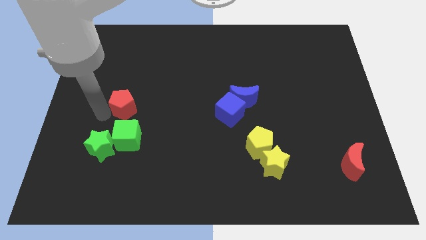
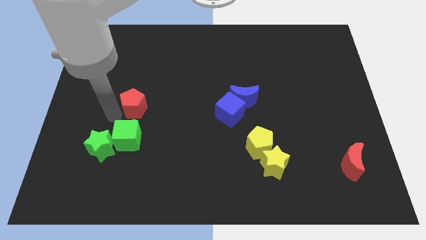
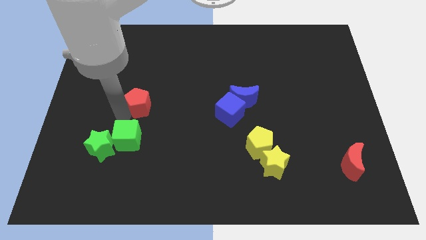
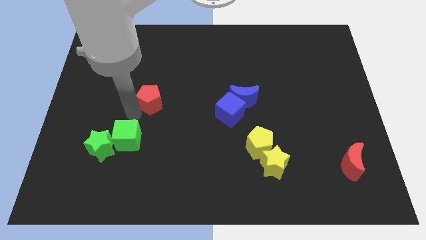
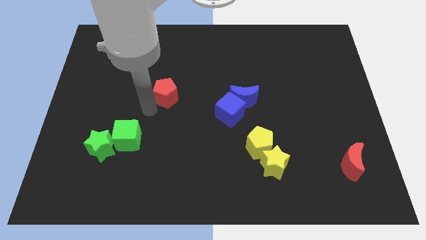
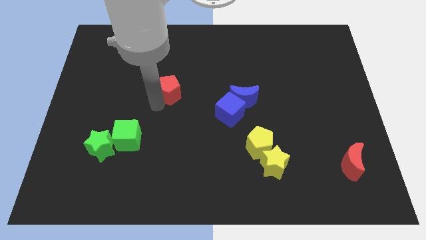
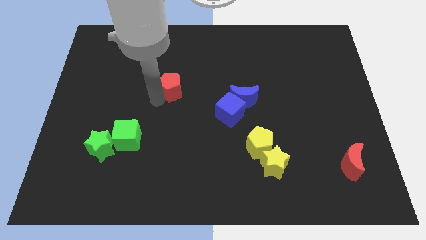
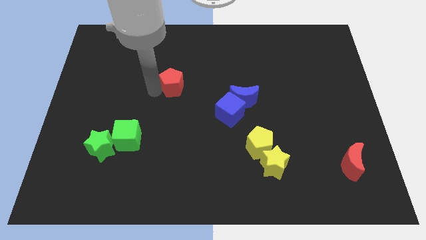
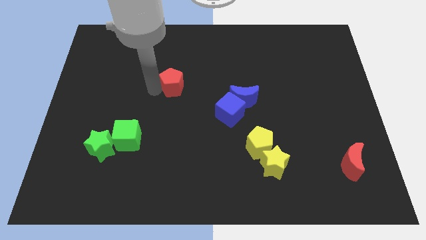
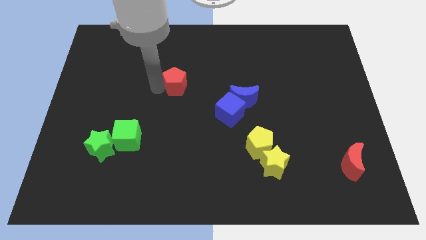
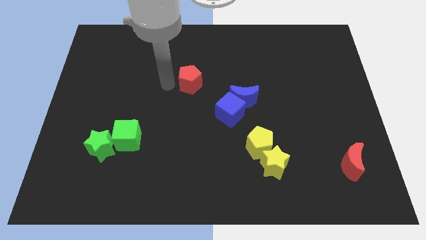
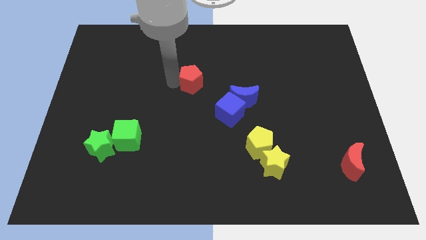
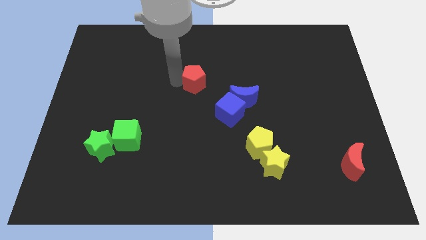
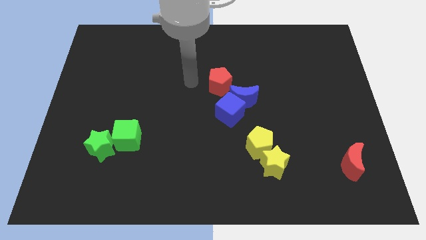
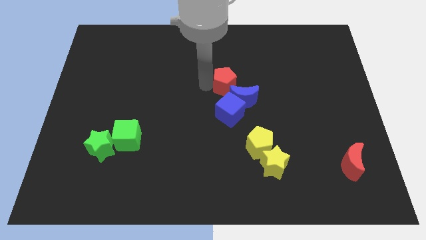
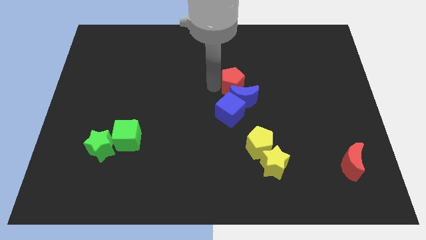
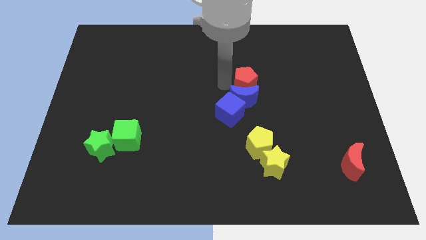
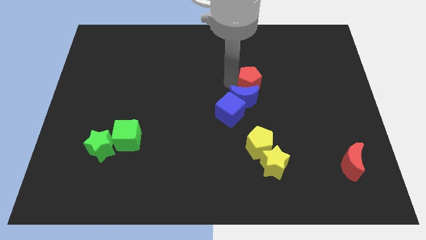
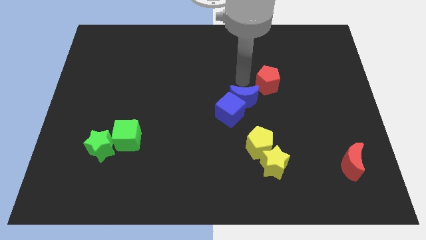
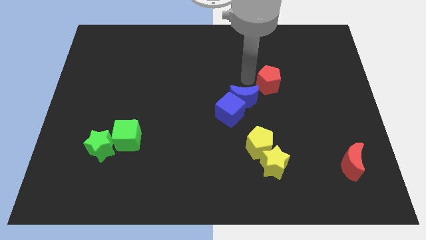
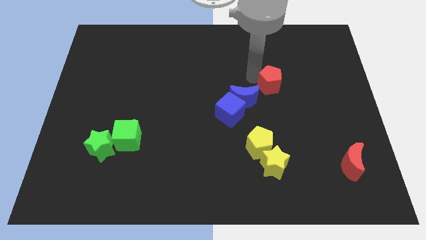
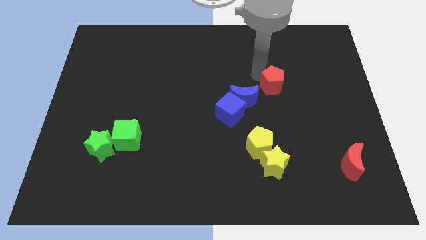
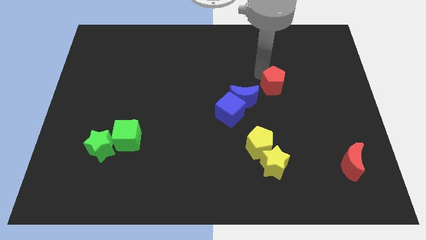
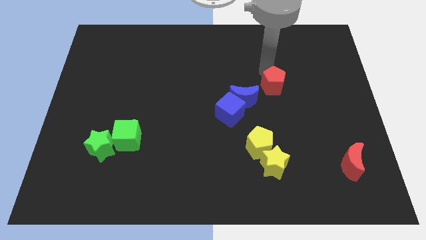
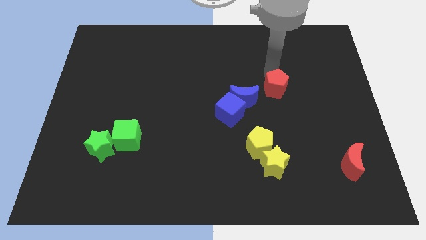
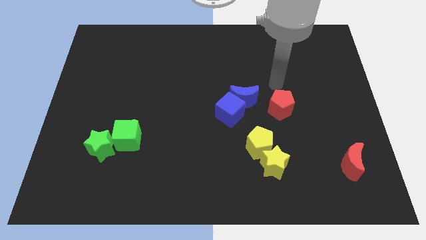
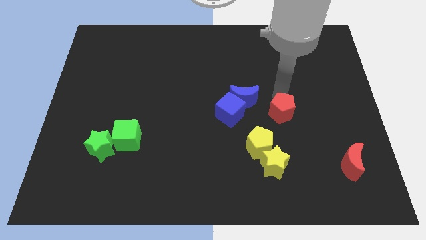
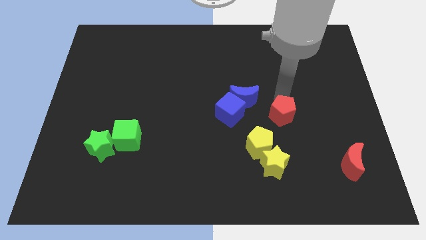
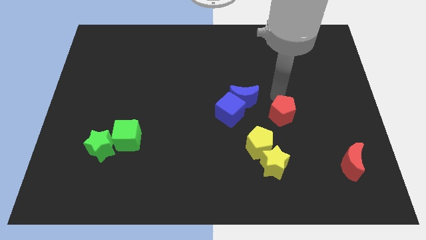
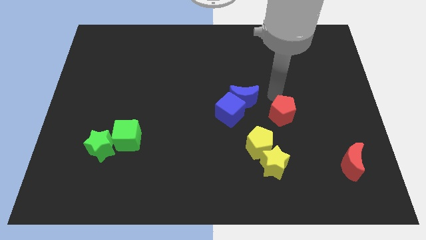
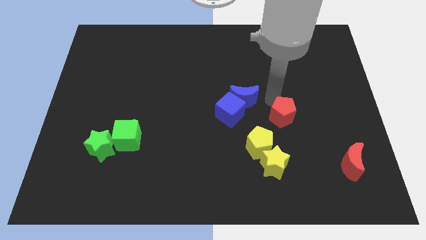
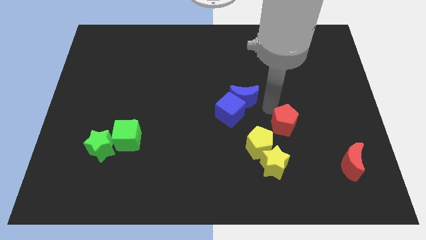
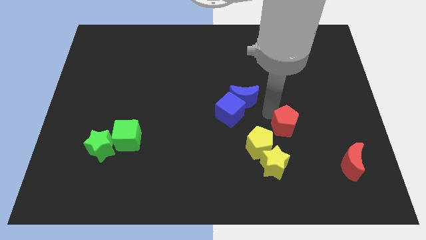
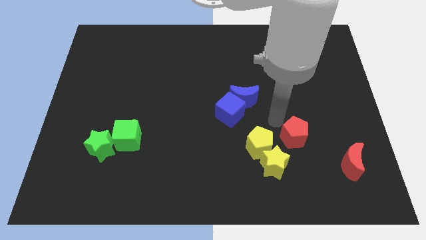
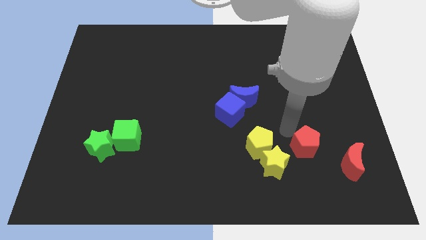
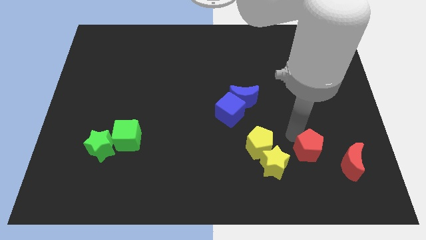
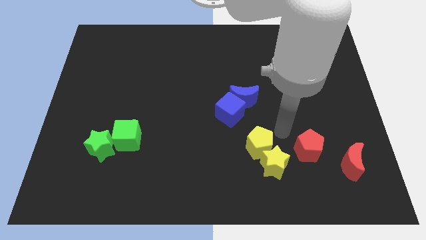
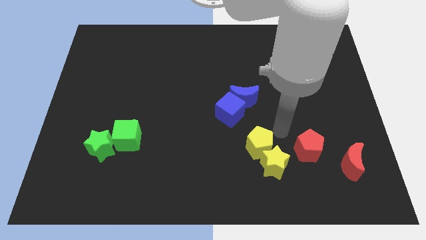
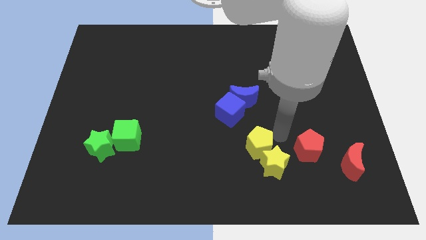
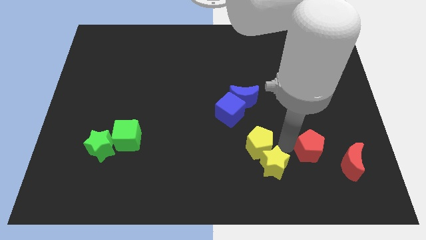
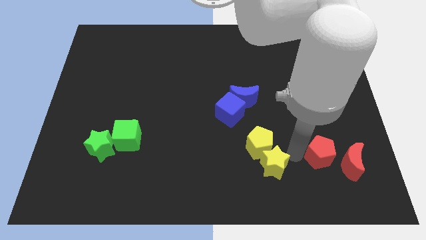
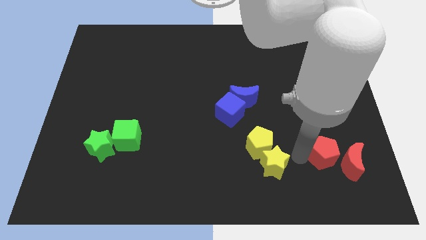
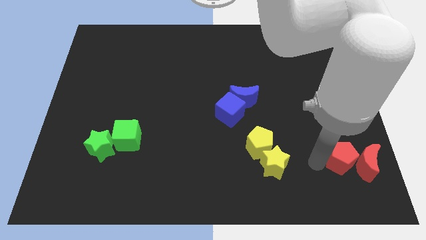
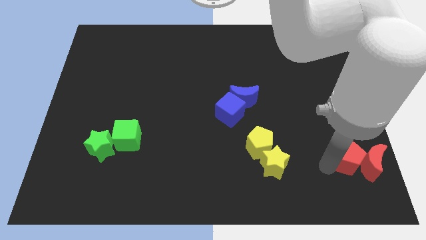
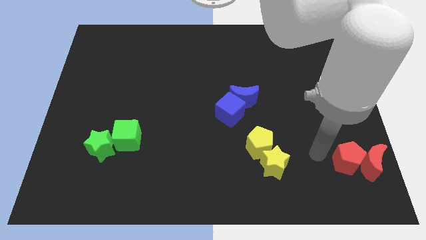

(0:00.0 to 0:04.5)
push the red pentagon towards the bottom right of the board

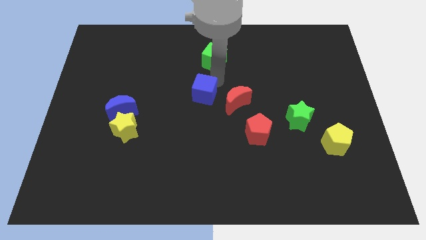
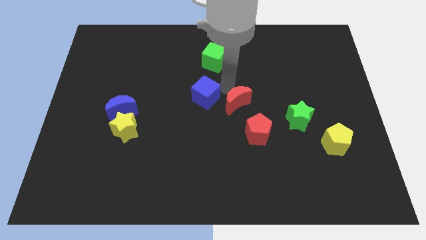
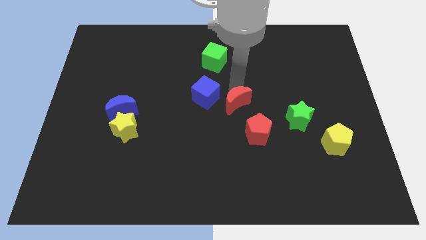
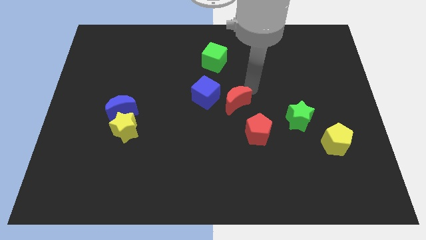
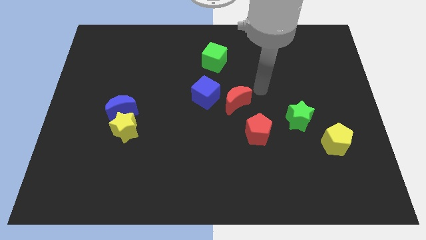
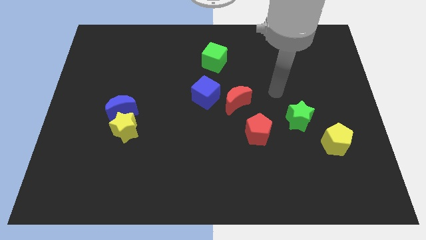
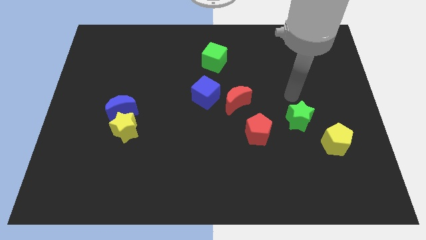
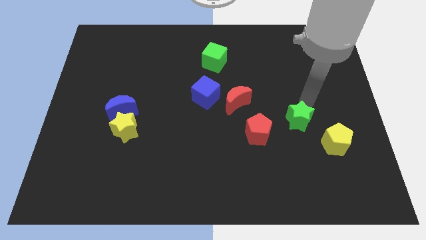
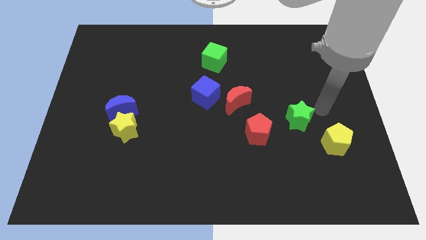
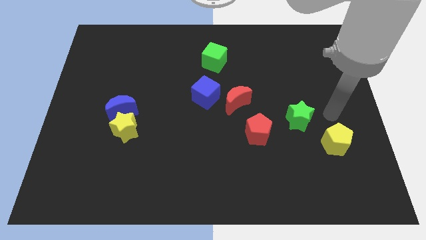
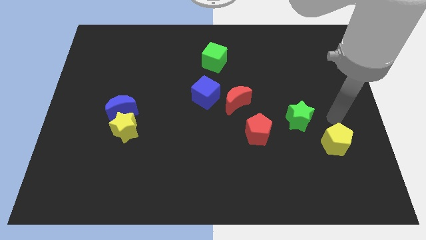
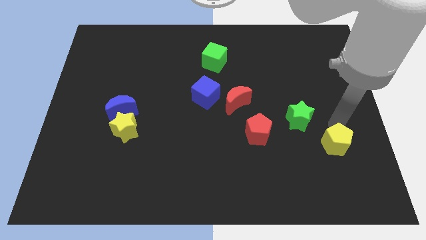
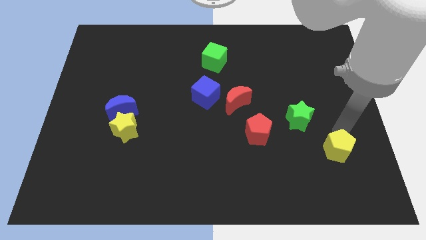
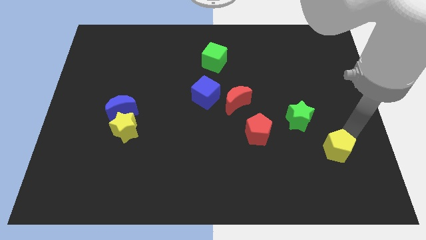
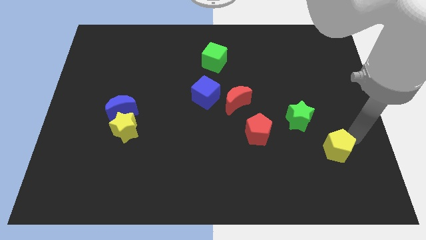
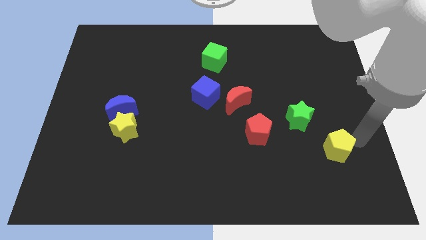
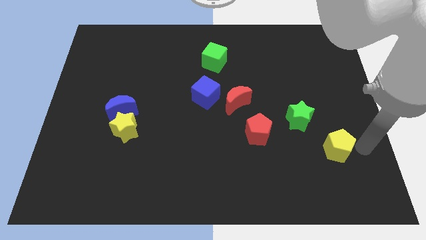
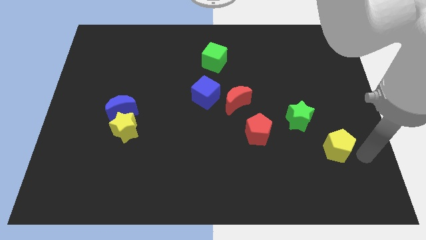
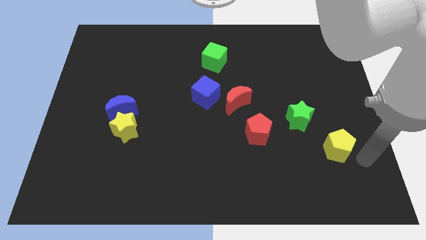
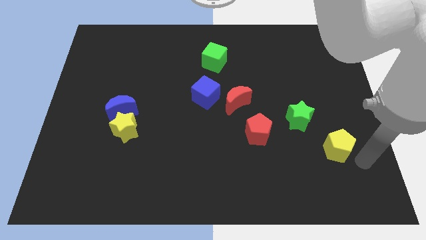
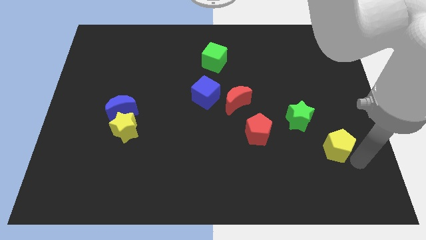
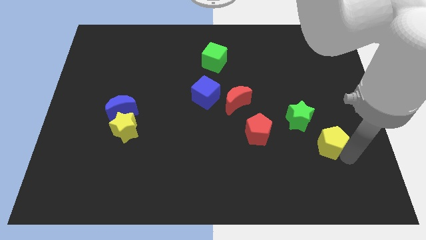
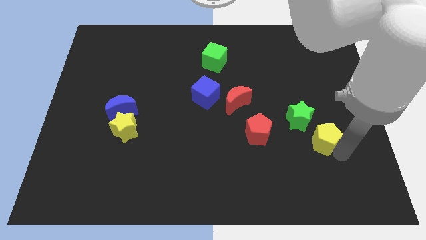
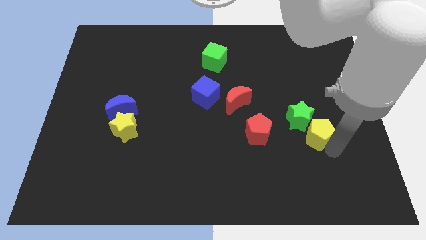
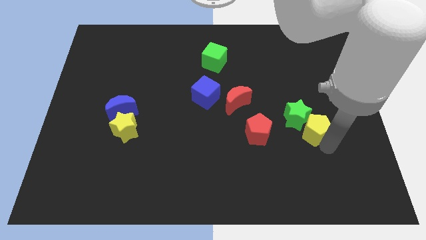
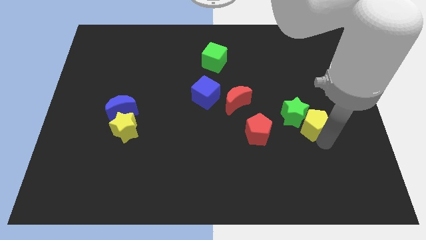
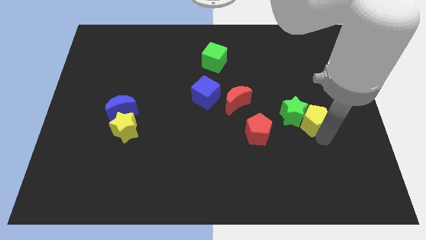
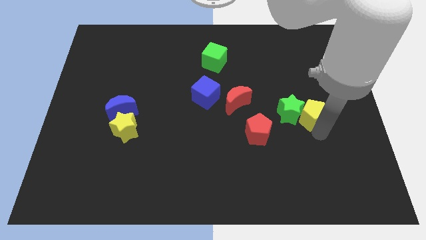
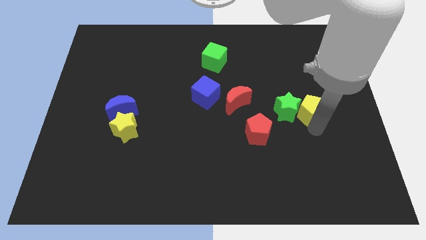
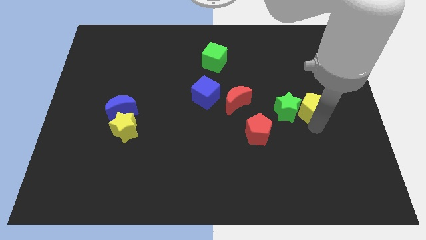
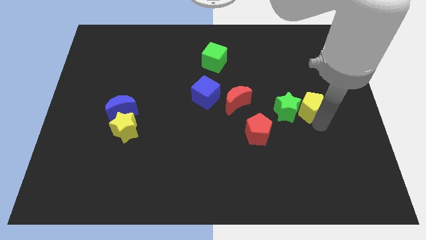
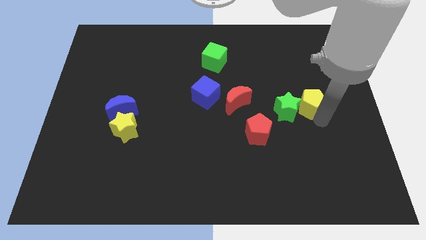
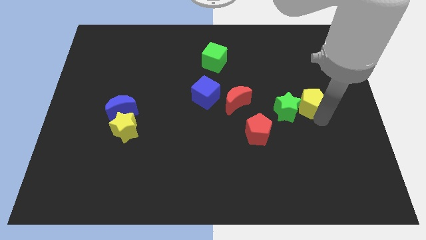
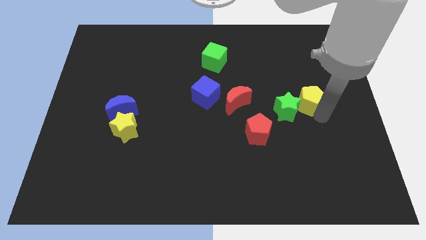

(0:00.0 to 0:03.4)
place the yellow pentagon right to the green star

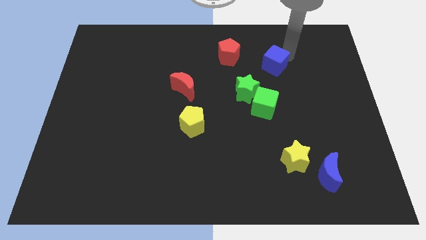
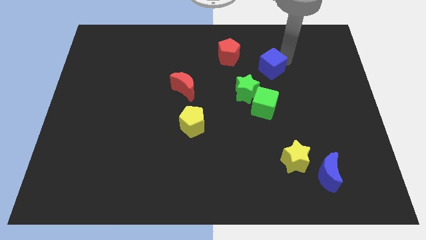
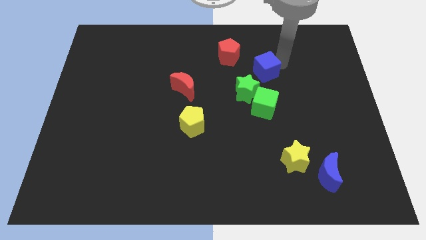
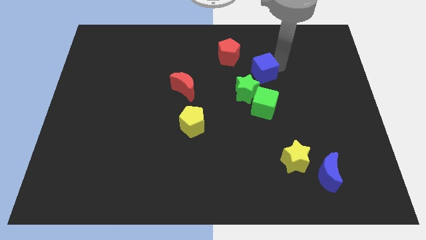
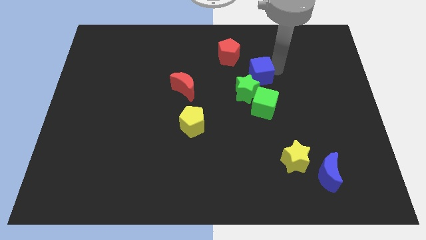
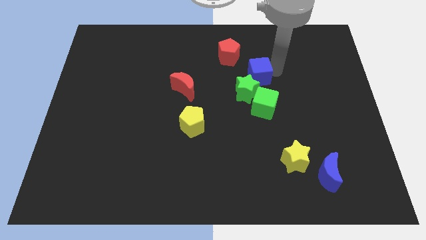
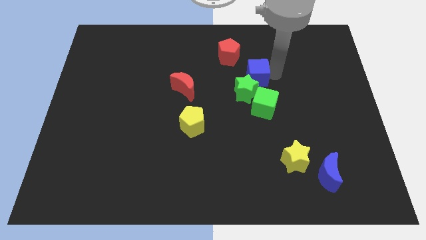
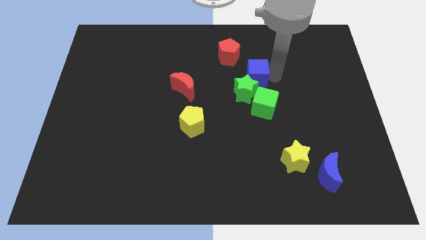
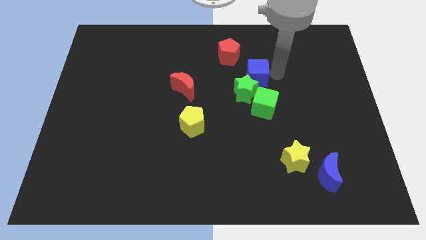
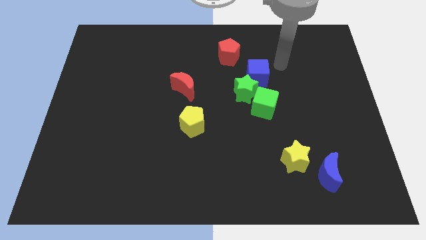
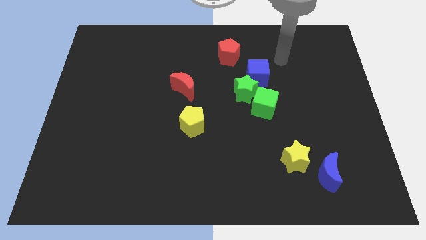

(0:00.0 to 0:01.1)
push the blue cube towards the green star
